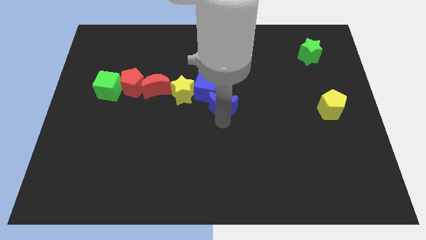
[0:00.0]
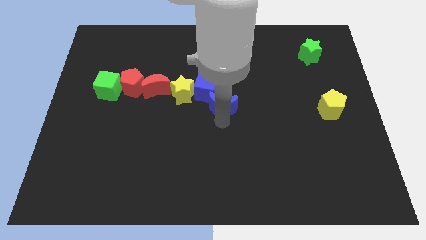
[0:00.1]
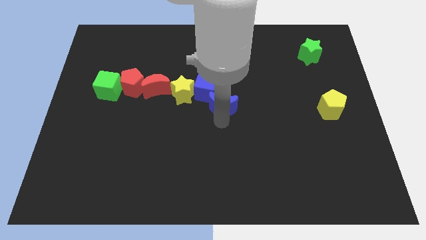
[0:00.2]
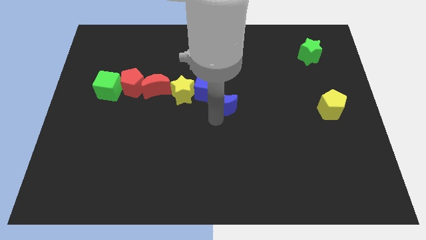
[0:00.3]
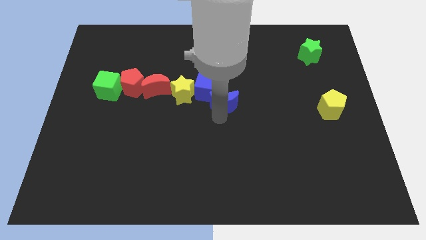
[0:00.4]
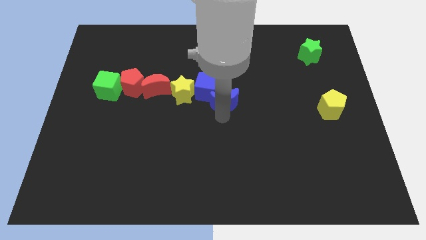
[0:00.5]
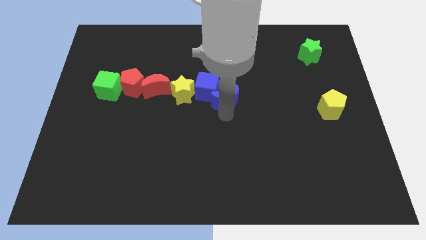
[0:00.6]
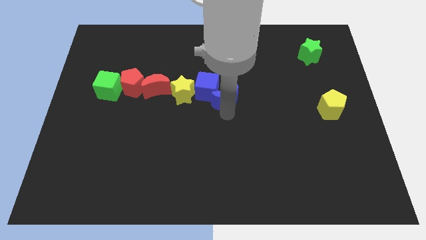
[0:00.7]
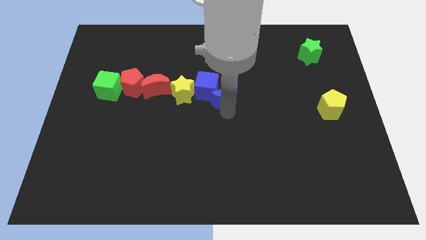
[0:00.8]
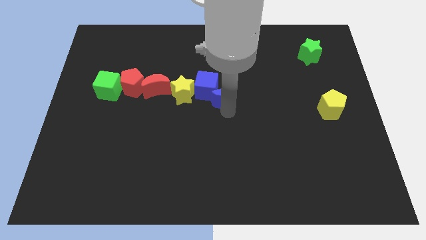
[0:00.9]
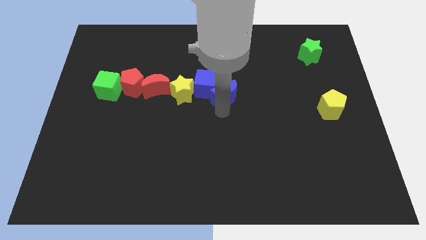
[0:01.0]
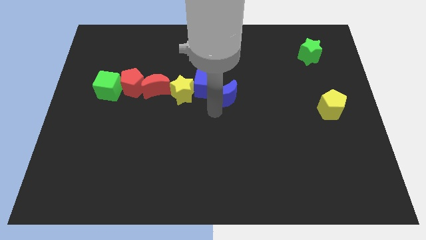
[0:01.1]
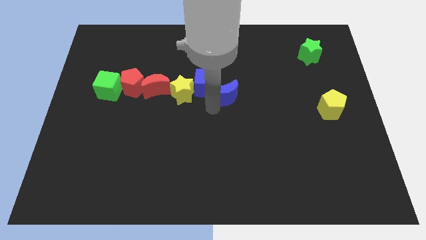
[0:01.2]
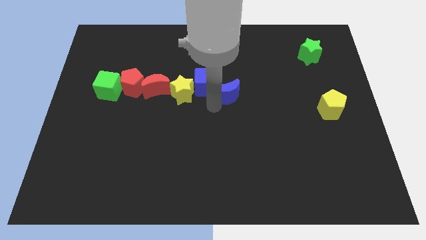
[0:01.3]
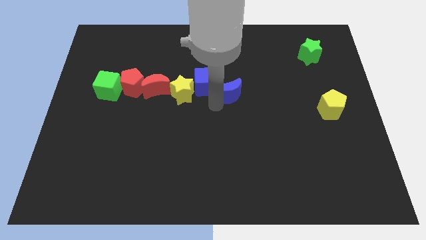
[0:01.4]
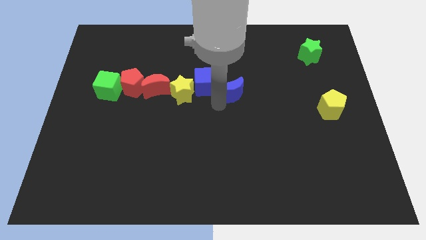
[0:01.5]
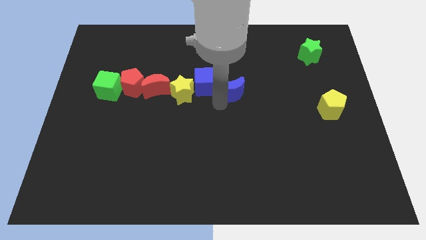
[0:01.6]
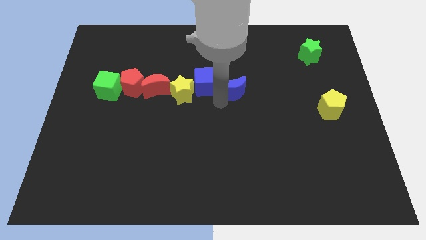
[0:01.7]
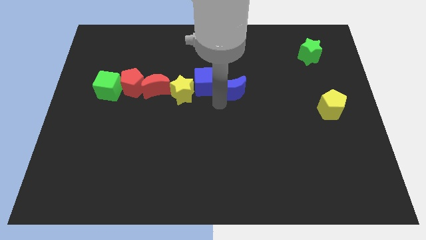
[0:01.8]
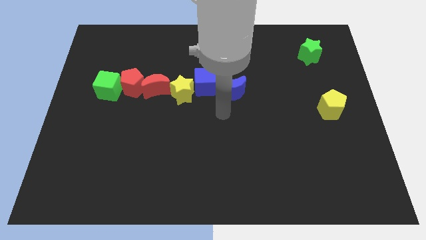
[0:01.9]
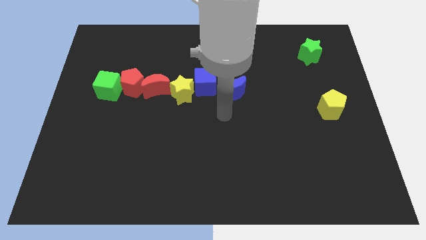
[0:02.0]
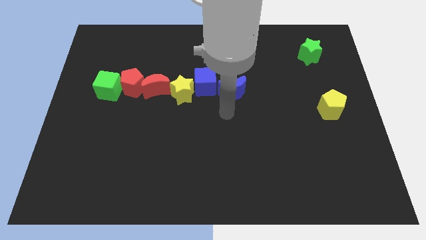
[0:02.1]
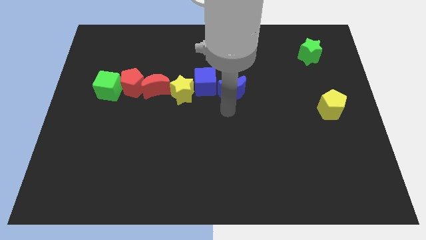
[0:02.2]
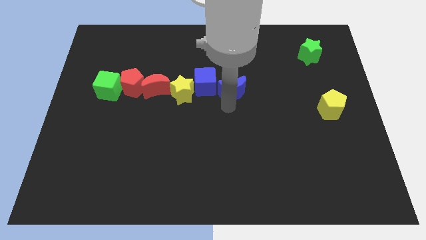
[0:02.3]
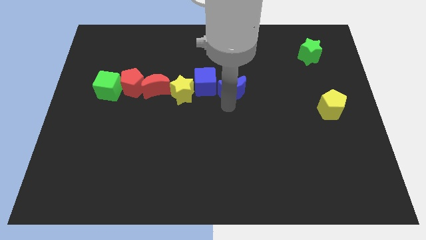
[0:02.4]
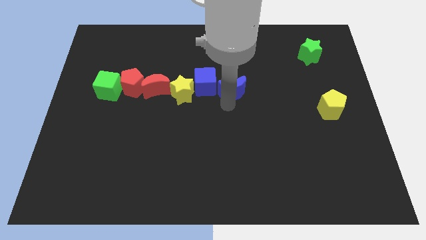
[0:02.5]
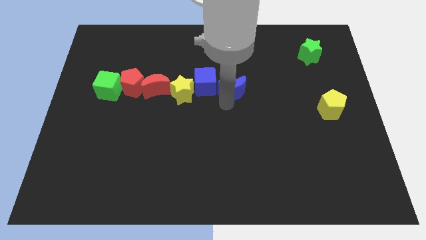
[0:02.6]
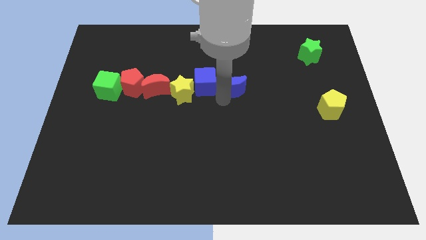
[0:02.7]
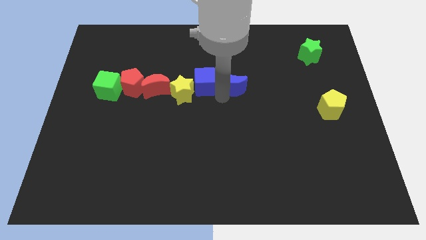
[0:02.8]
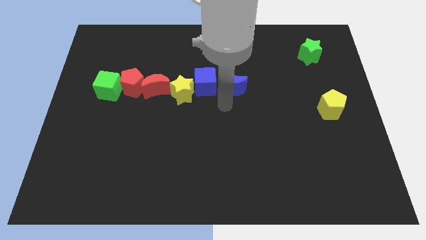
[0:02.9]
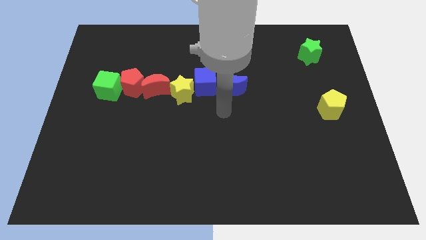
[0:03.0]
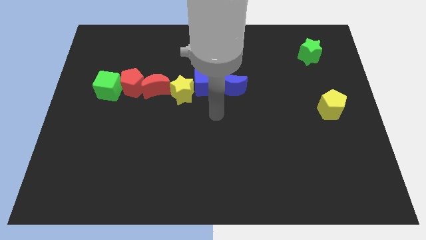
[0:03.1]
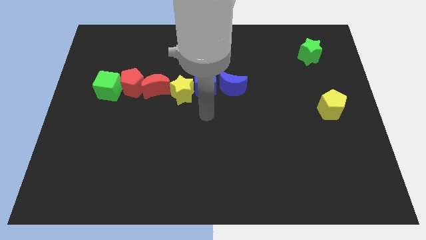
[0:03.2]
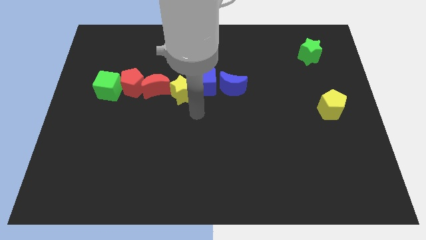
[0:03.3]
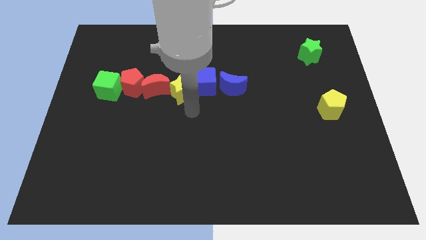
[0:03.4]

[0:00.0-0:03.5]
put the blue crescent on the right side of the blue cube

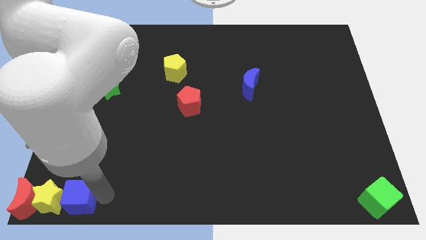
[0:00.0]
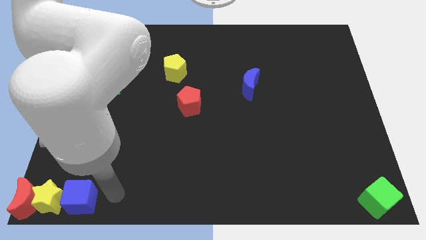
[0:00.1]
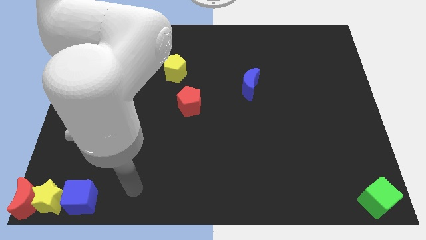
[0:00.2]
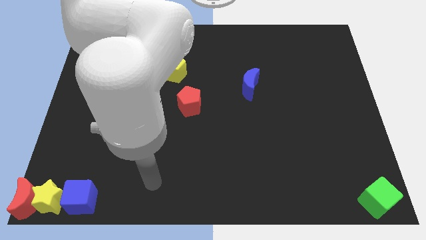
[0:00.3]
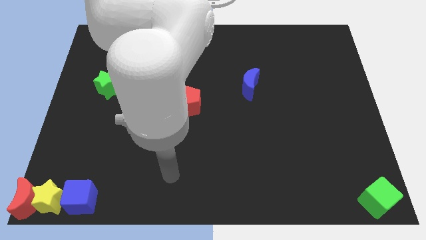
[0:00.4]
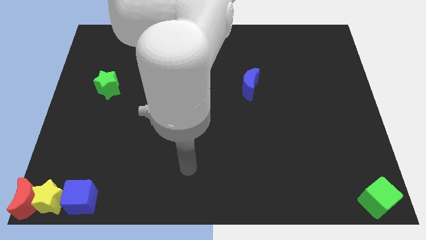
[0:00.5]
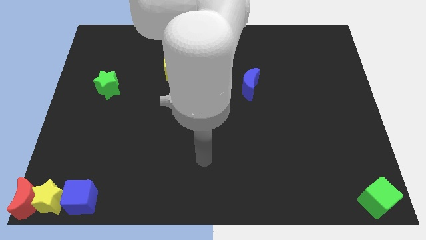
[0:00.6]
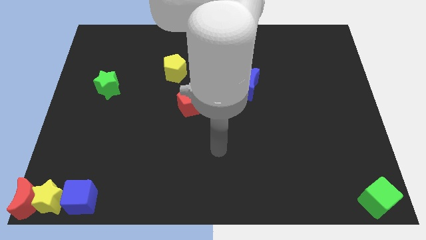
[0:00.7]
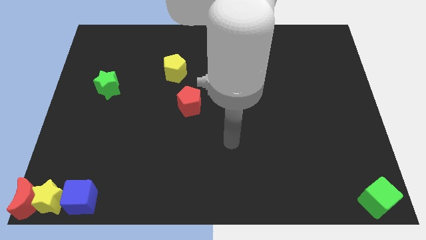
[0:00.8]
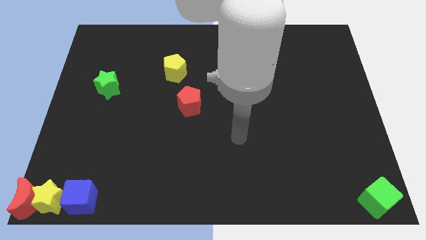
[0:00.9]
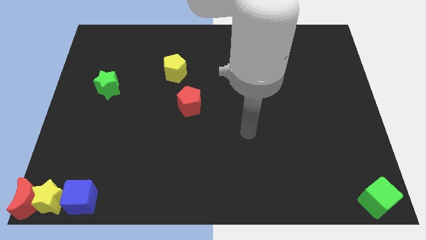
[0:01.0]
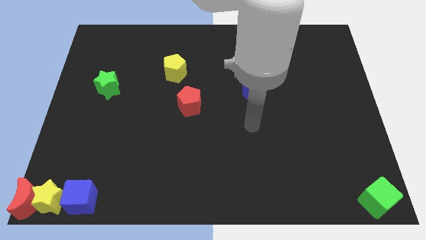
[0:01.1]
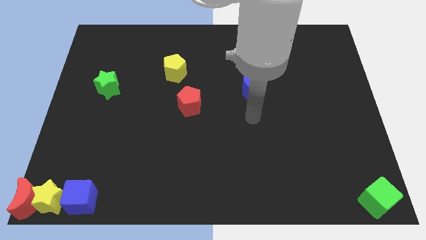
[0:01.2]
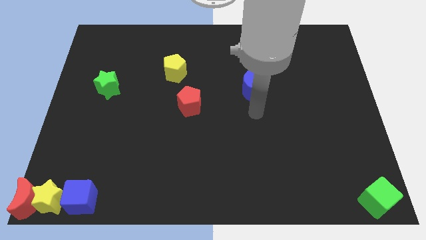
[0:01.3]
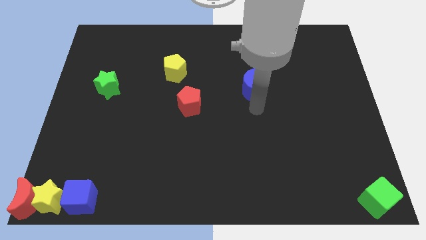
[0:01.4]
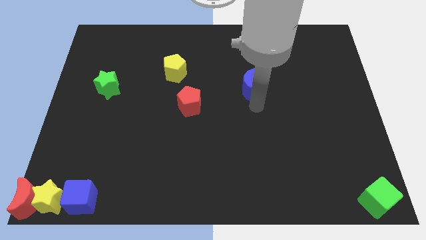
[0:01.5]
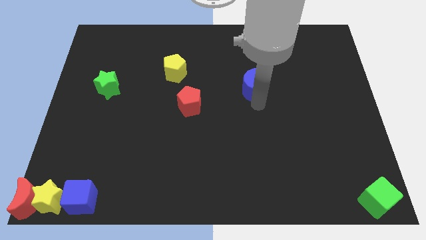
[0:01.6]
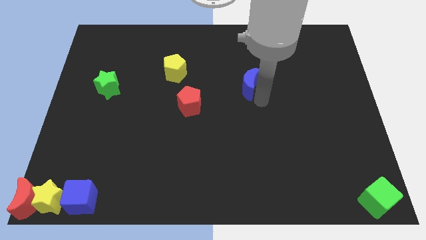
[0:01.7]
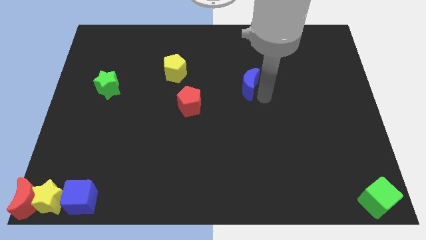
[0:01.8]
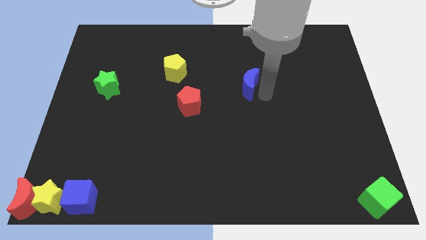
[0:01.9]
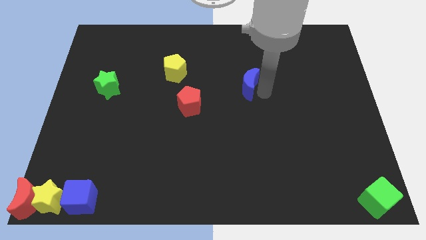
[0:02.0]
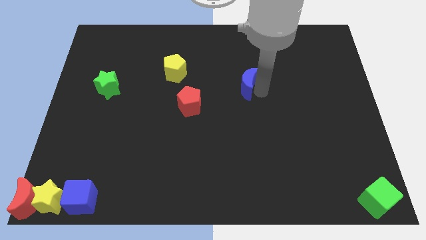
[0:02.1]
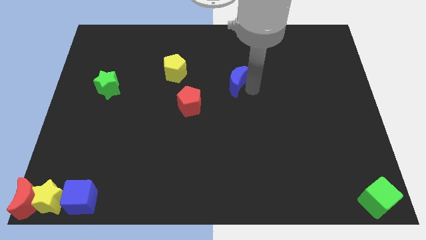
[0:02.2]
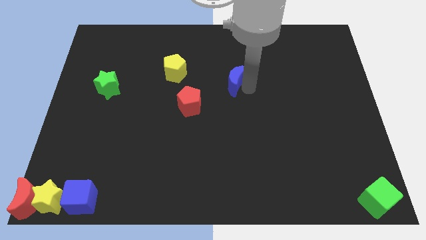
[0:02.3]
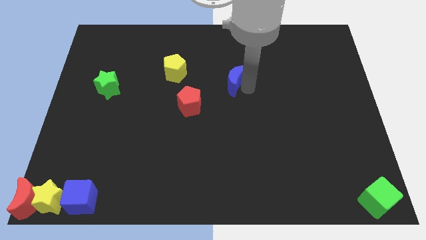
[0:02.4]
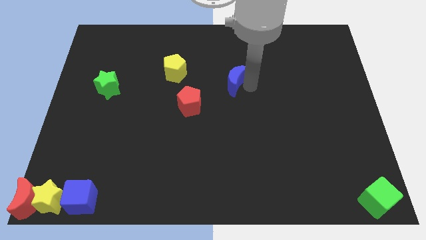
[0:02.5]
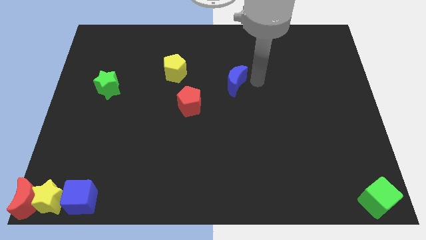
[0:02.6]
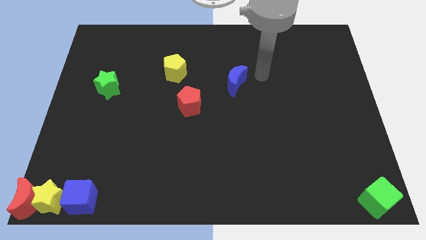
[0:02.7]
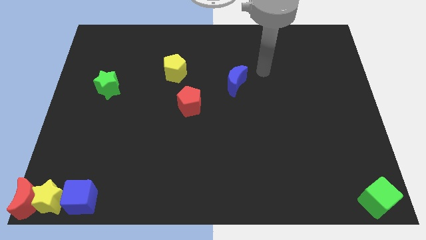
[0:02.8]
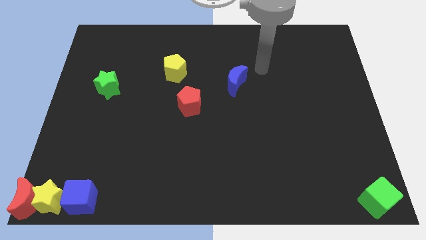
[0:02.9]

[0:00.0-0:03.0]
move the arm away from the blue cube

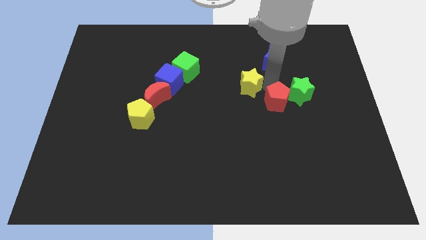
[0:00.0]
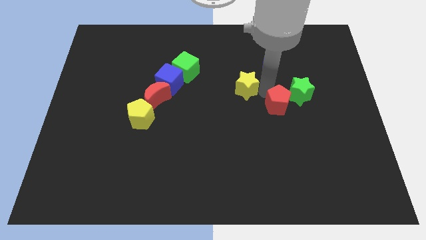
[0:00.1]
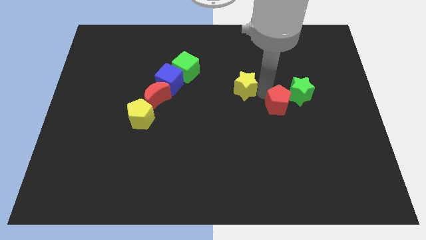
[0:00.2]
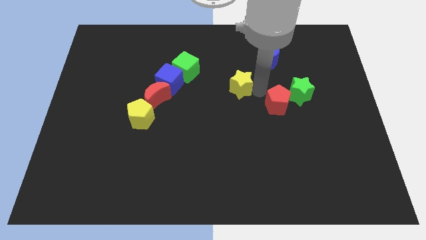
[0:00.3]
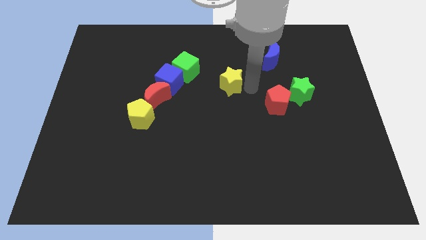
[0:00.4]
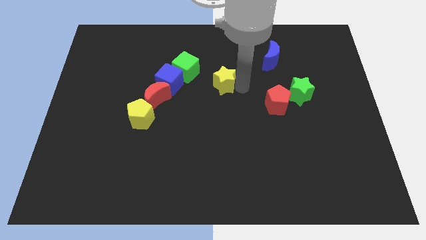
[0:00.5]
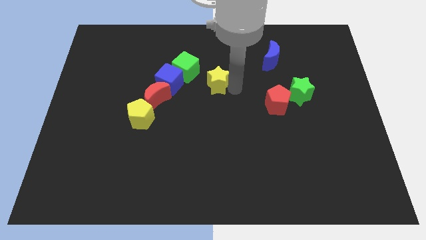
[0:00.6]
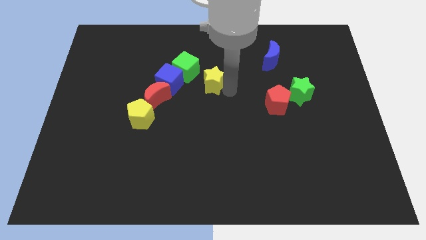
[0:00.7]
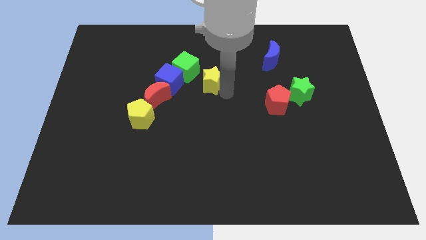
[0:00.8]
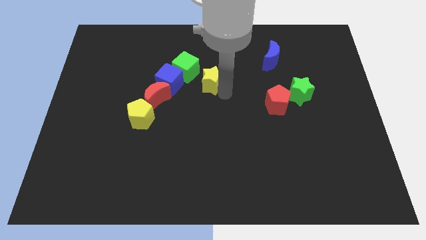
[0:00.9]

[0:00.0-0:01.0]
push the yellow star away from the red pentagon

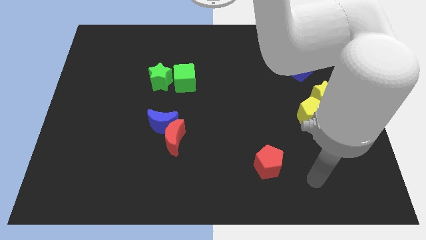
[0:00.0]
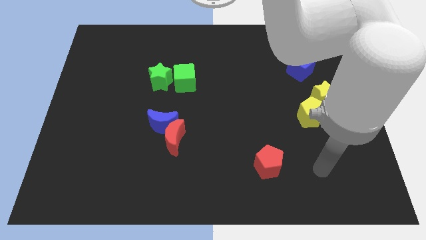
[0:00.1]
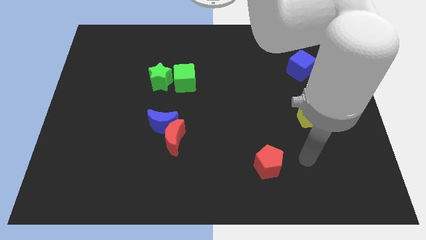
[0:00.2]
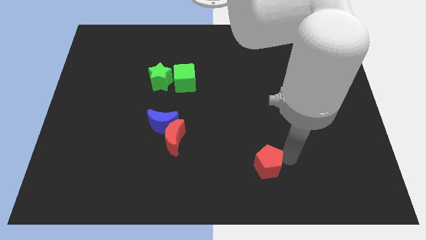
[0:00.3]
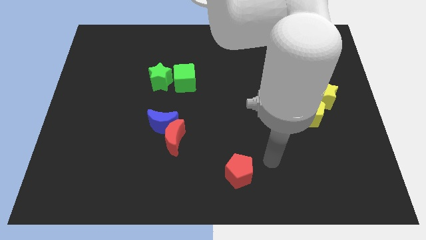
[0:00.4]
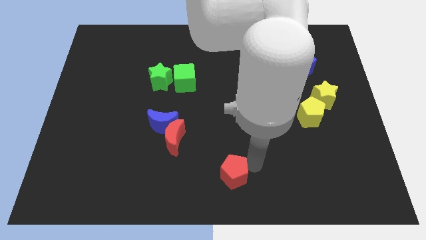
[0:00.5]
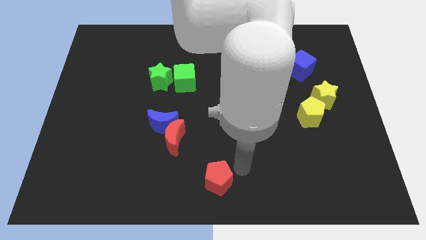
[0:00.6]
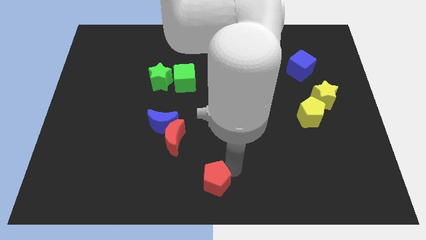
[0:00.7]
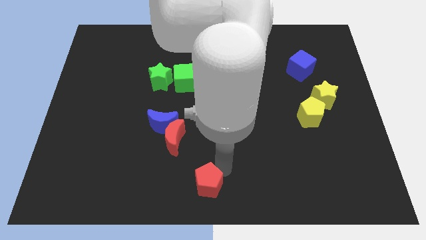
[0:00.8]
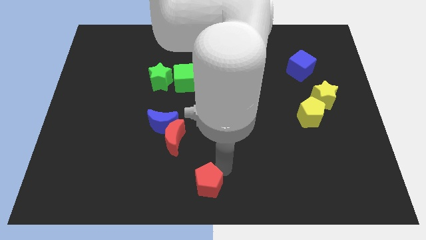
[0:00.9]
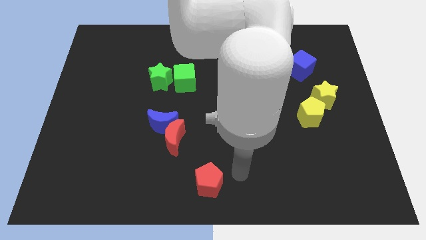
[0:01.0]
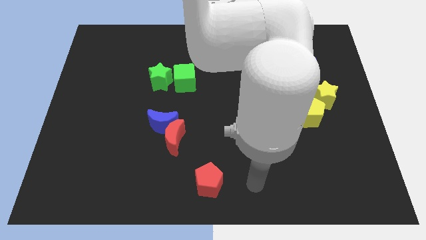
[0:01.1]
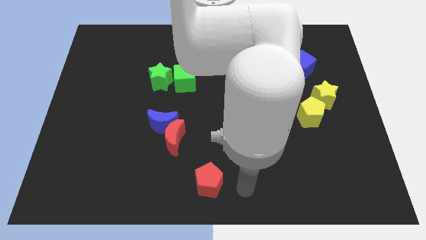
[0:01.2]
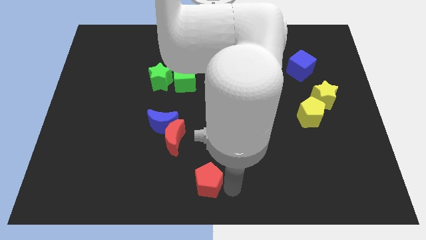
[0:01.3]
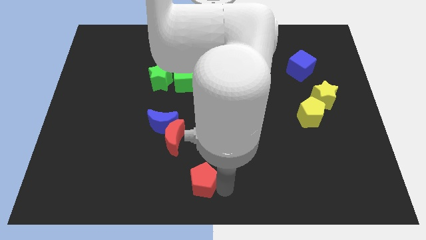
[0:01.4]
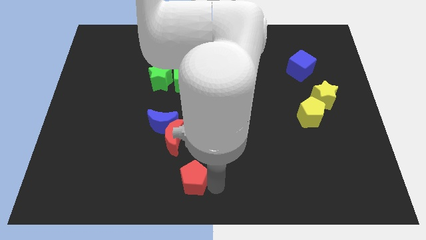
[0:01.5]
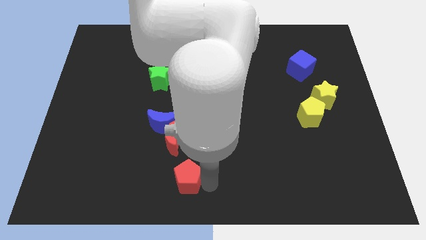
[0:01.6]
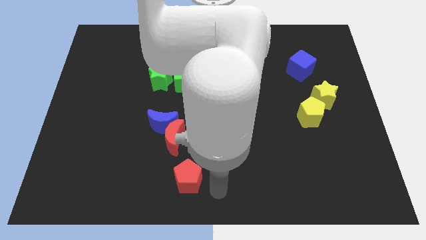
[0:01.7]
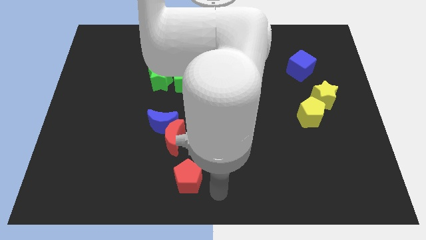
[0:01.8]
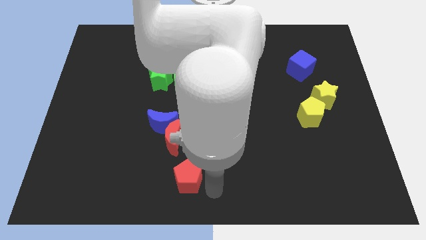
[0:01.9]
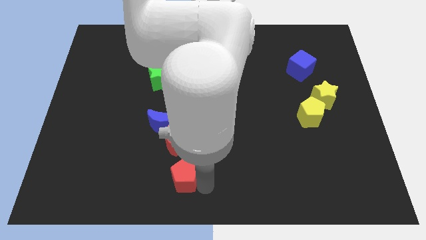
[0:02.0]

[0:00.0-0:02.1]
put the red pentagon below the red moon
